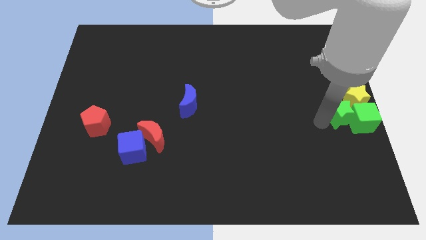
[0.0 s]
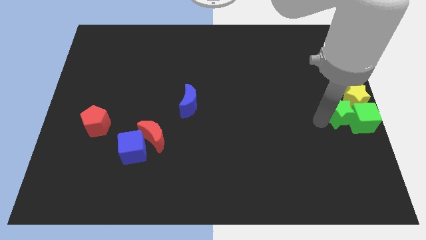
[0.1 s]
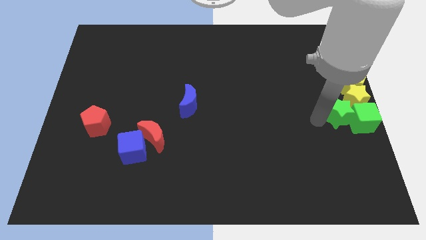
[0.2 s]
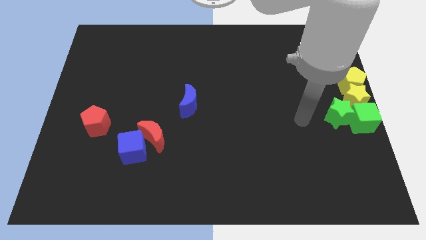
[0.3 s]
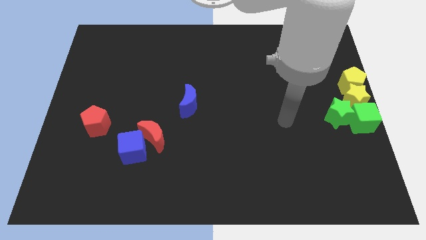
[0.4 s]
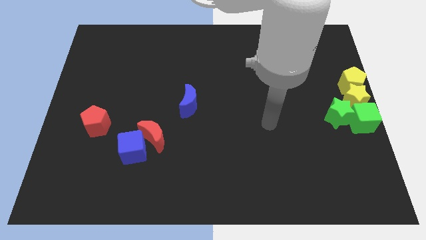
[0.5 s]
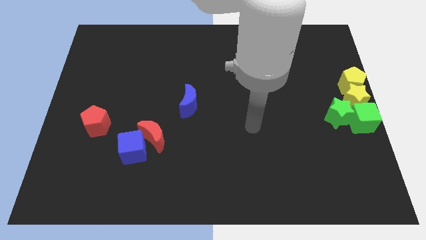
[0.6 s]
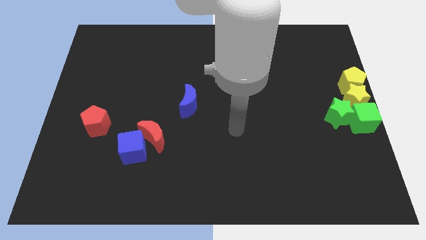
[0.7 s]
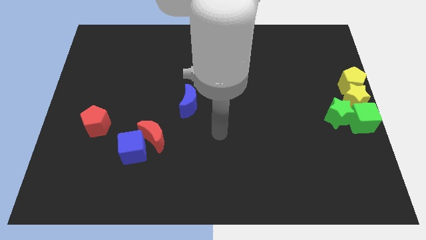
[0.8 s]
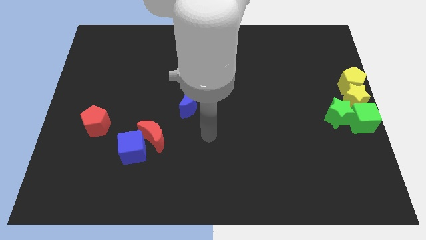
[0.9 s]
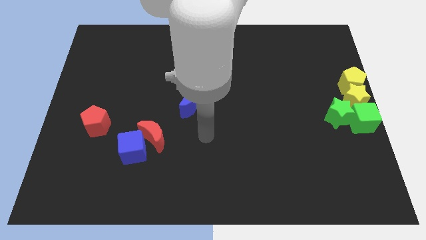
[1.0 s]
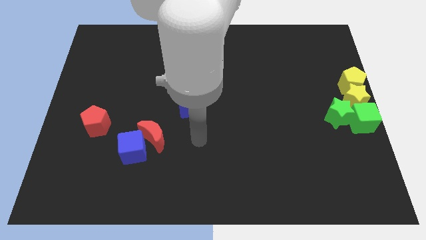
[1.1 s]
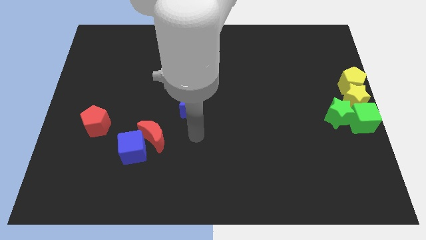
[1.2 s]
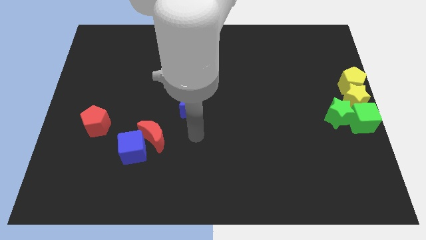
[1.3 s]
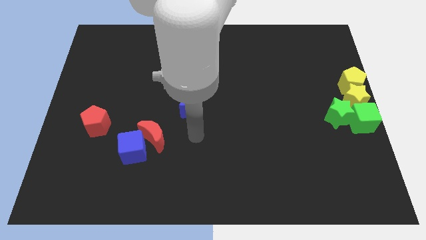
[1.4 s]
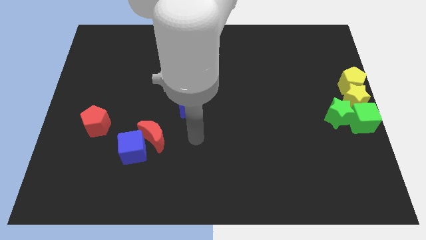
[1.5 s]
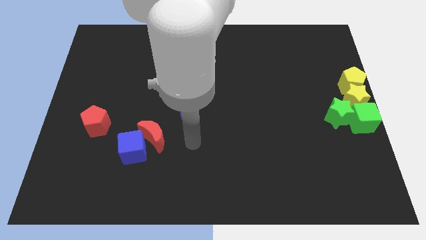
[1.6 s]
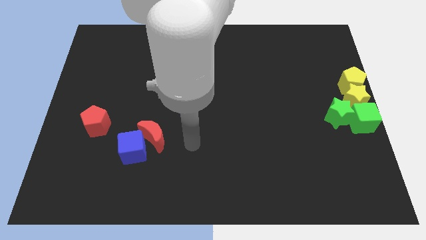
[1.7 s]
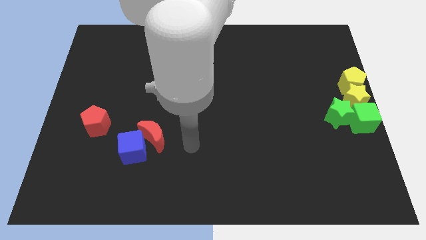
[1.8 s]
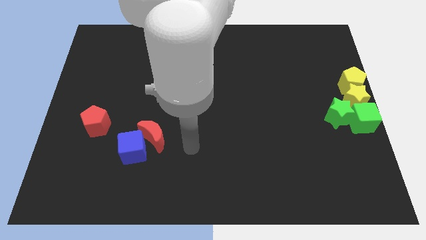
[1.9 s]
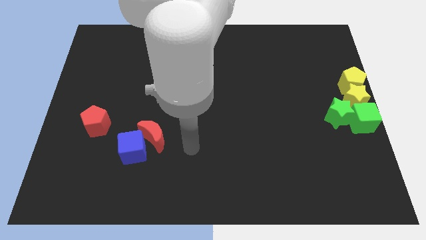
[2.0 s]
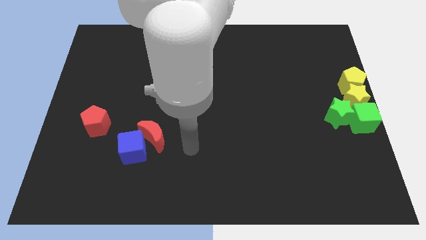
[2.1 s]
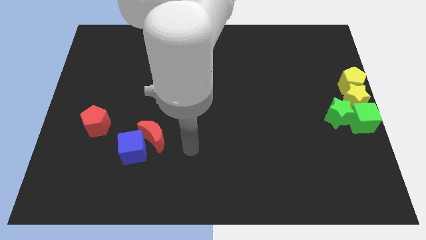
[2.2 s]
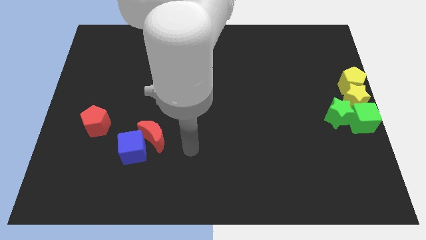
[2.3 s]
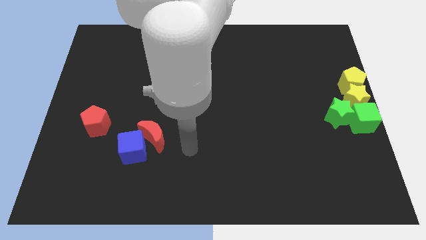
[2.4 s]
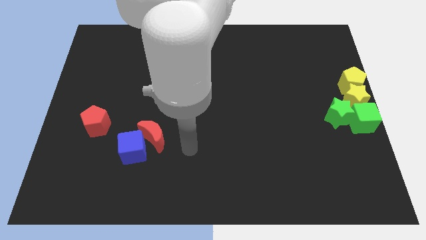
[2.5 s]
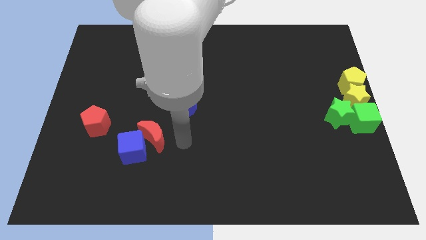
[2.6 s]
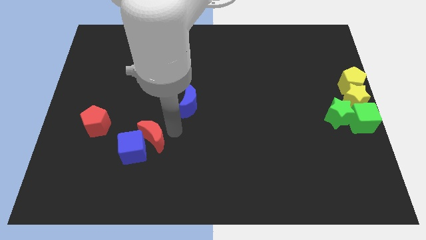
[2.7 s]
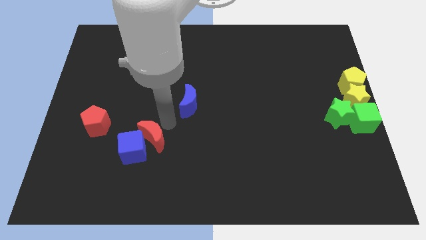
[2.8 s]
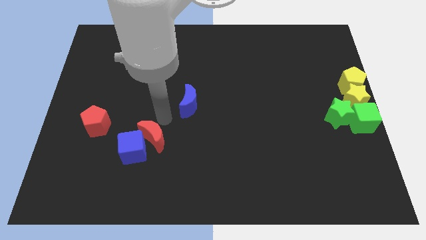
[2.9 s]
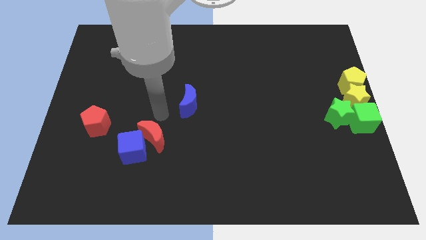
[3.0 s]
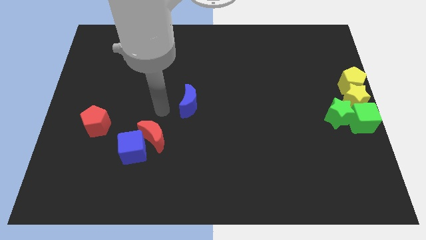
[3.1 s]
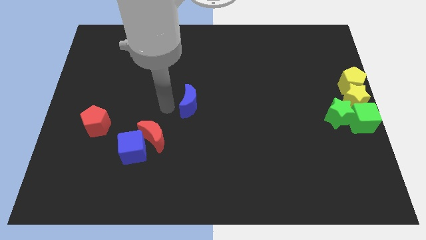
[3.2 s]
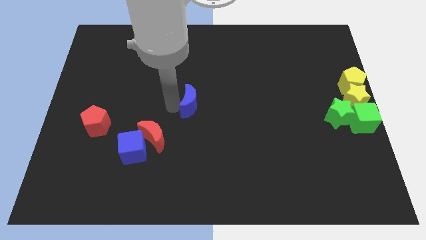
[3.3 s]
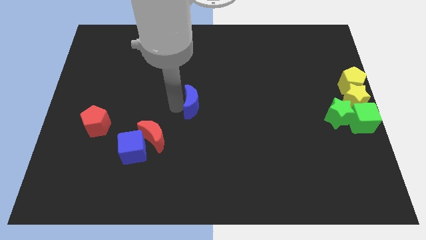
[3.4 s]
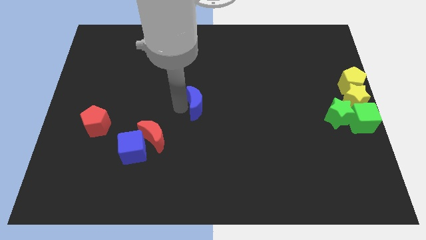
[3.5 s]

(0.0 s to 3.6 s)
touch the left side of the blue crescent

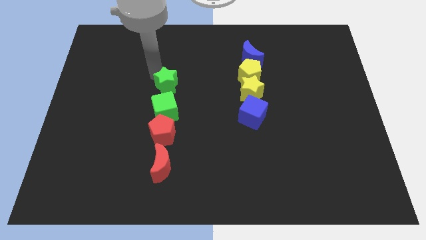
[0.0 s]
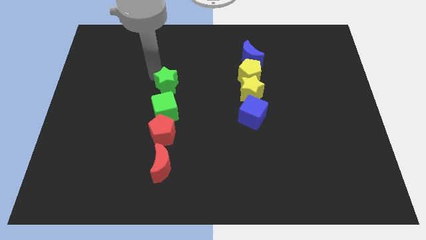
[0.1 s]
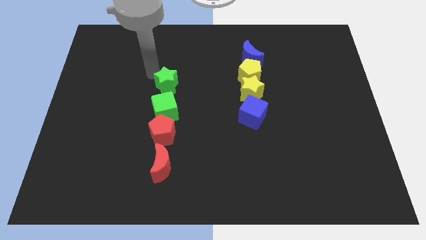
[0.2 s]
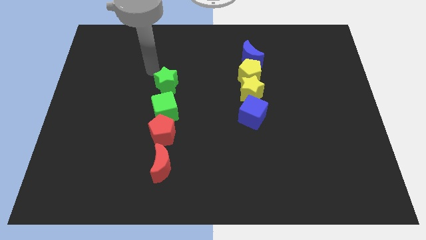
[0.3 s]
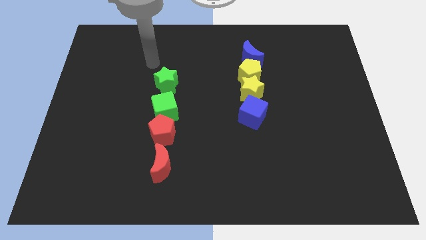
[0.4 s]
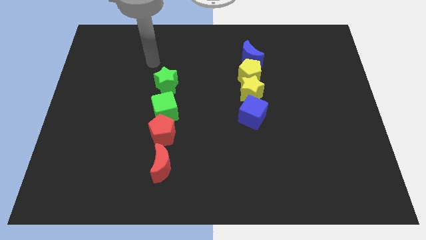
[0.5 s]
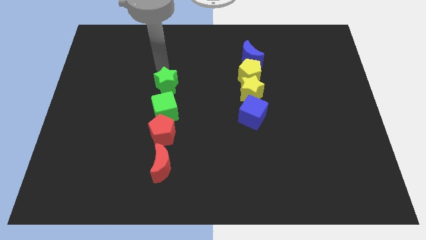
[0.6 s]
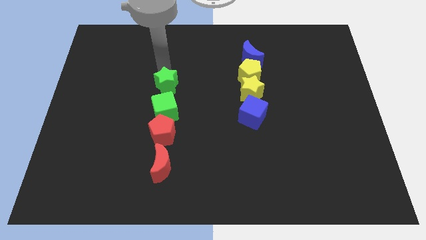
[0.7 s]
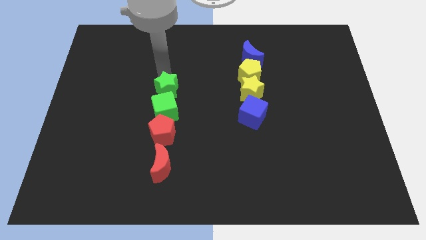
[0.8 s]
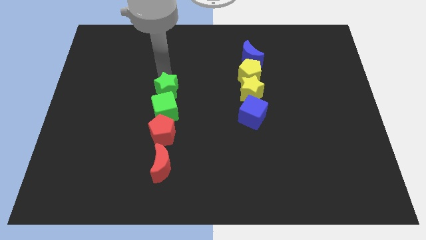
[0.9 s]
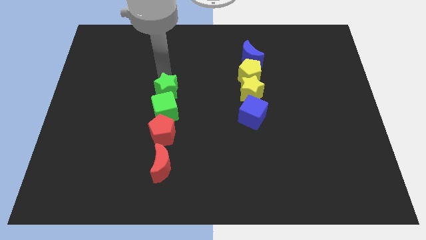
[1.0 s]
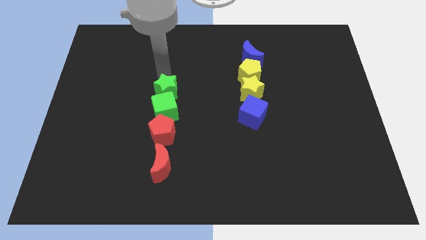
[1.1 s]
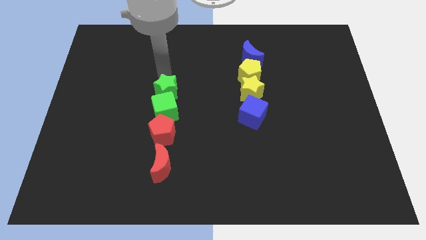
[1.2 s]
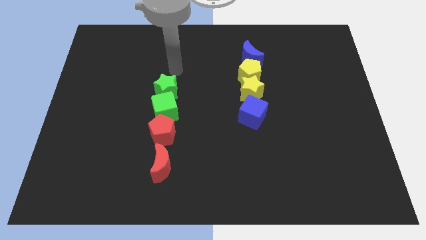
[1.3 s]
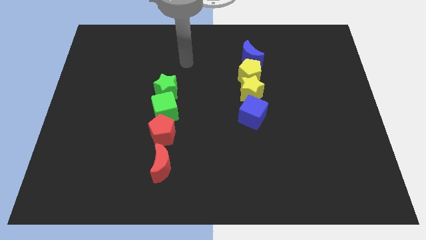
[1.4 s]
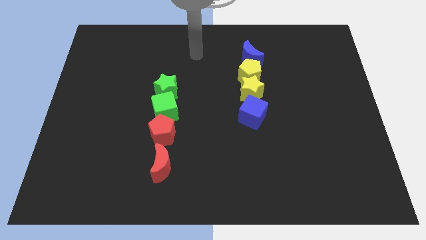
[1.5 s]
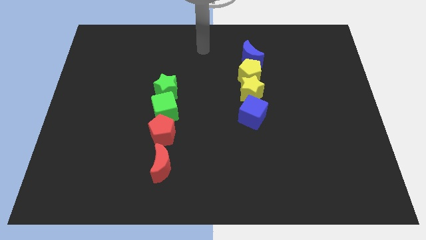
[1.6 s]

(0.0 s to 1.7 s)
drag the green star horizontally to the yellow star

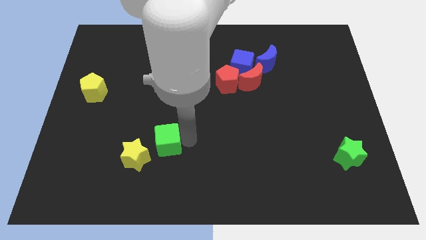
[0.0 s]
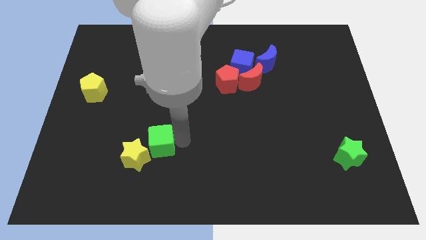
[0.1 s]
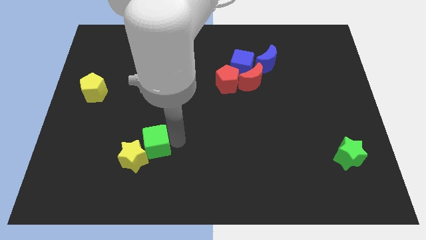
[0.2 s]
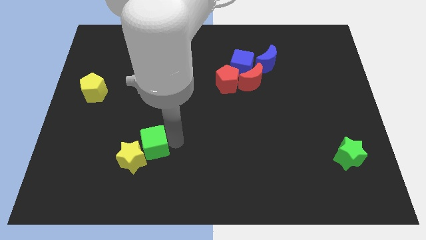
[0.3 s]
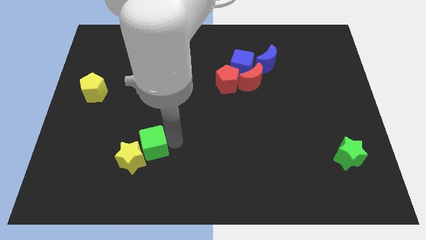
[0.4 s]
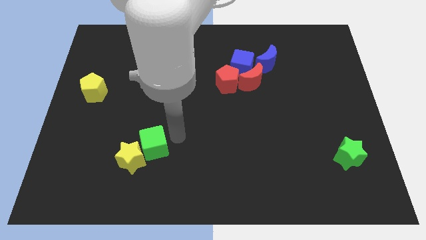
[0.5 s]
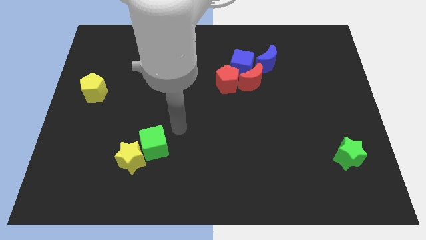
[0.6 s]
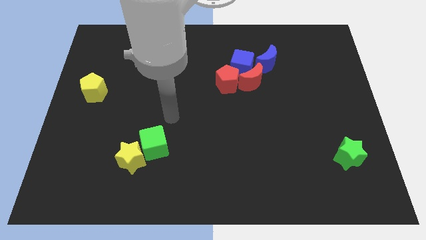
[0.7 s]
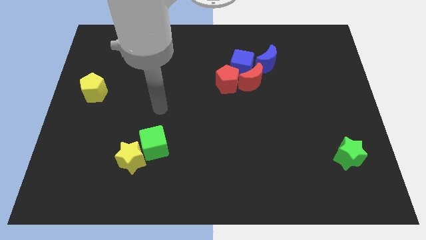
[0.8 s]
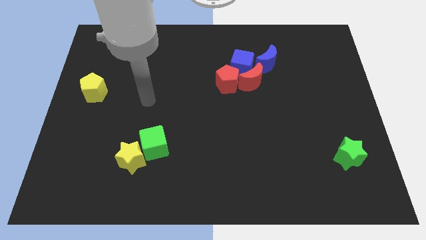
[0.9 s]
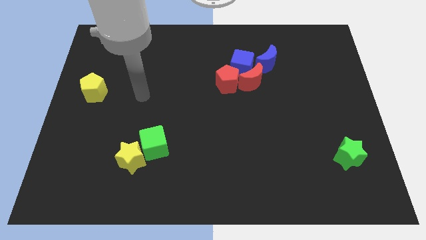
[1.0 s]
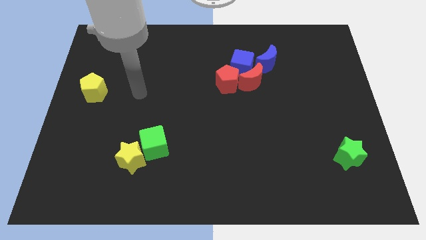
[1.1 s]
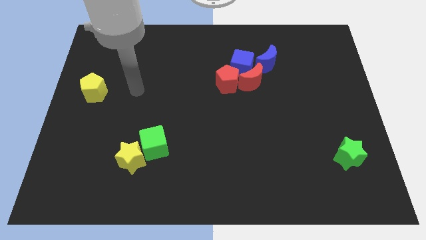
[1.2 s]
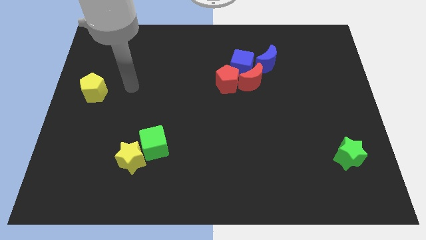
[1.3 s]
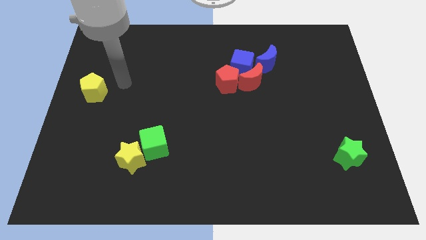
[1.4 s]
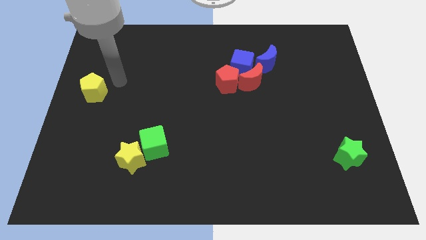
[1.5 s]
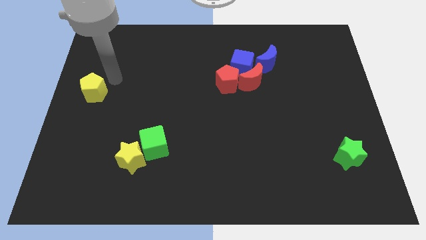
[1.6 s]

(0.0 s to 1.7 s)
place green cube to the right side of the yellow star

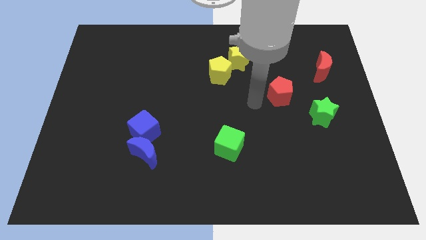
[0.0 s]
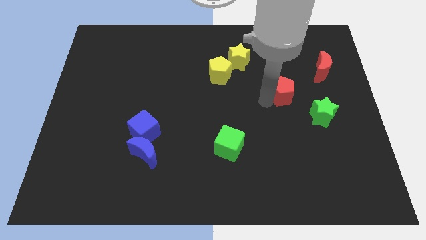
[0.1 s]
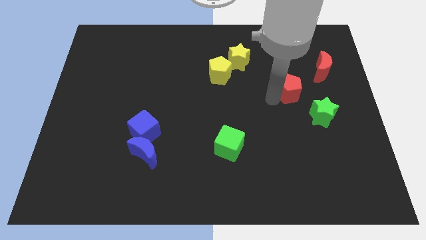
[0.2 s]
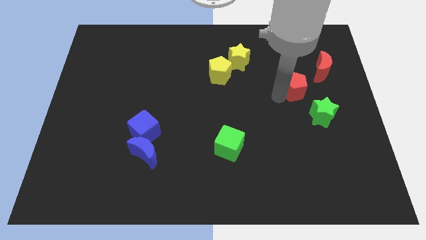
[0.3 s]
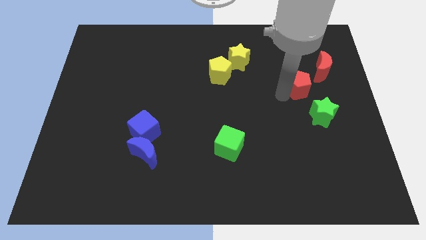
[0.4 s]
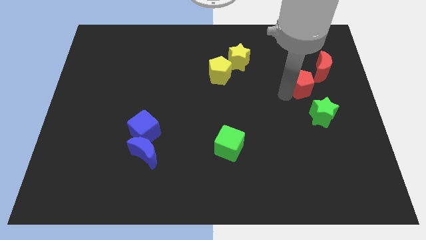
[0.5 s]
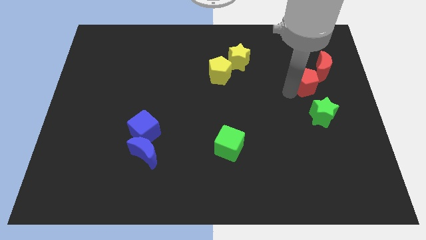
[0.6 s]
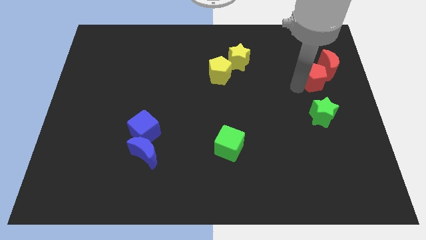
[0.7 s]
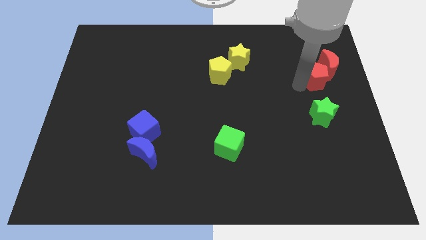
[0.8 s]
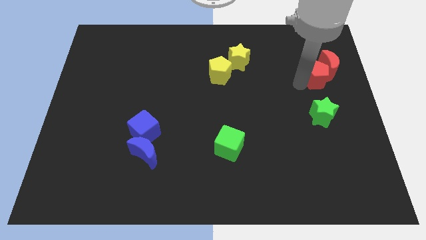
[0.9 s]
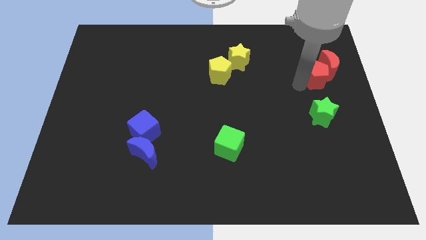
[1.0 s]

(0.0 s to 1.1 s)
push red pentagon into the red moon

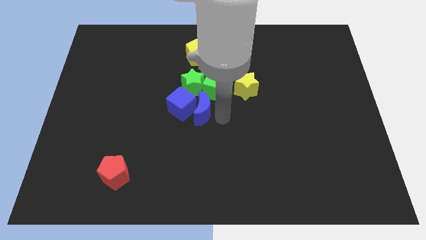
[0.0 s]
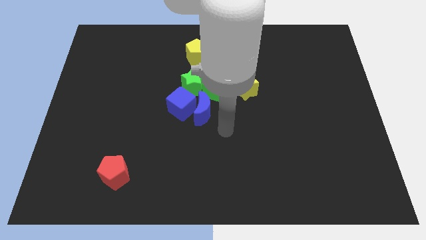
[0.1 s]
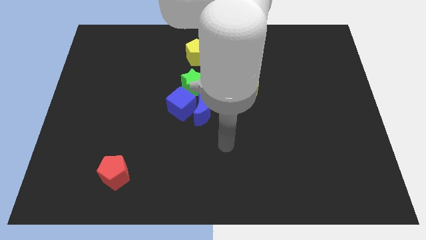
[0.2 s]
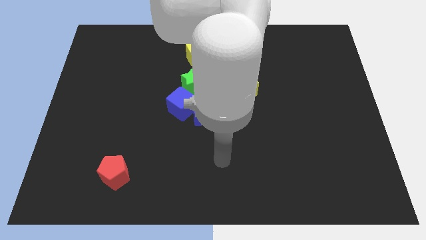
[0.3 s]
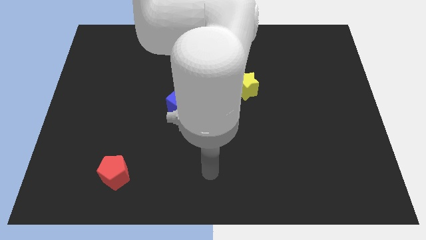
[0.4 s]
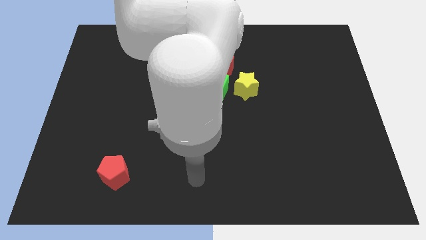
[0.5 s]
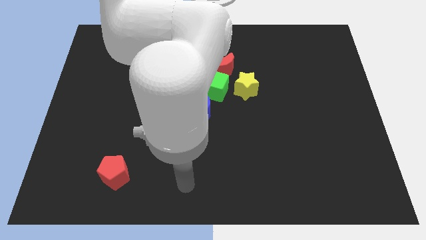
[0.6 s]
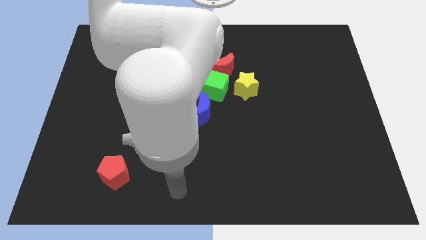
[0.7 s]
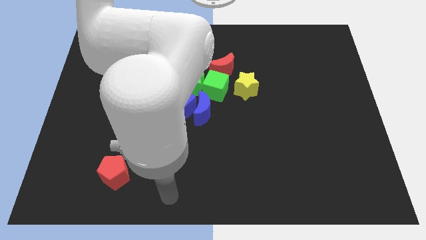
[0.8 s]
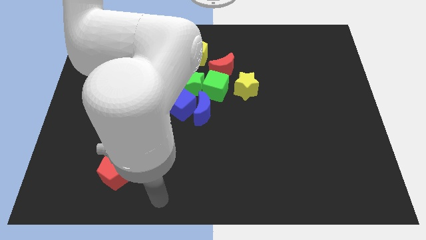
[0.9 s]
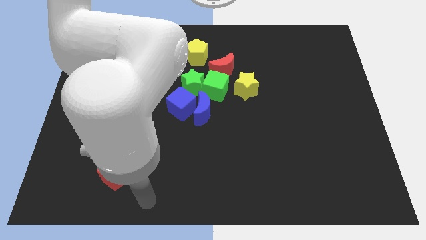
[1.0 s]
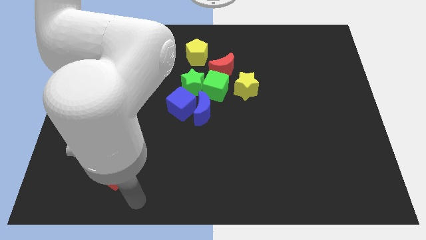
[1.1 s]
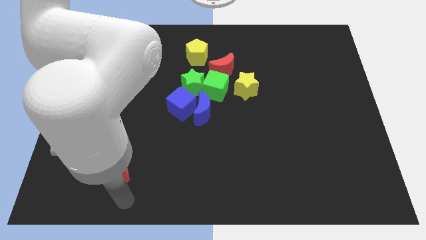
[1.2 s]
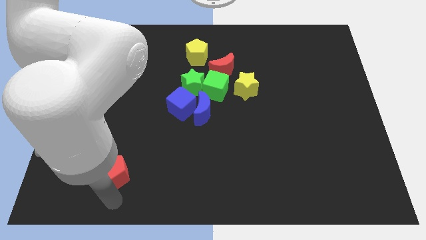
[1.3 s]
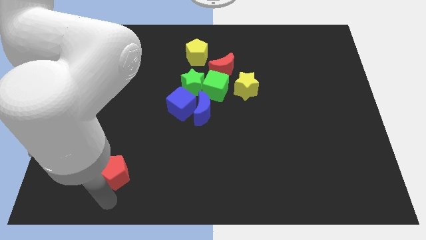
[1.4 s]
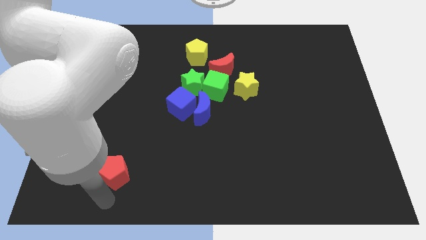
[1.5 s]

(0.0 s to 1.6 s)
place your hand at the bottom side of the red pentagon
